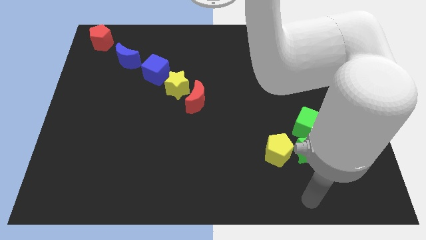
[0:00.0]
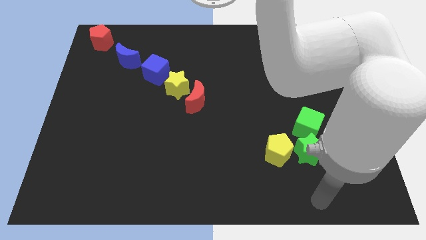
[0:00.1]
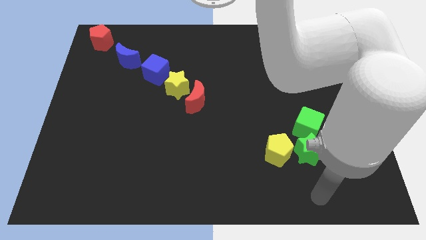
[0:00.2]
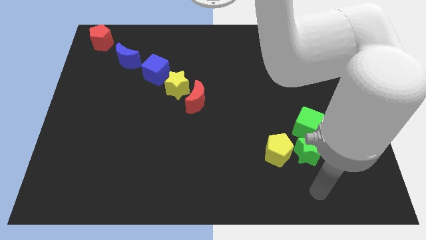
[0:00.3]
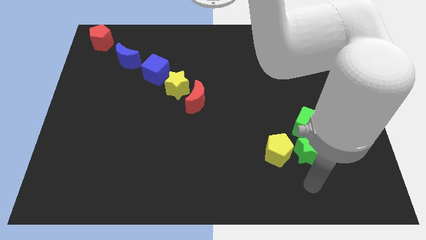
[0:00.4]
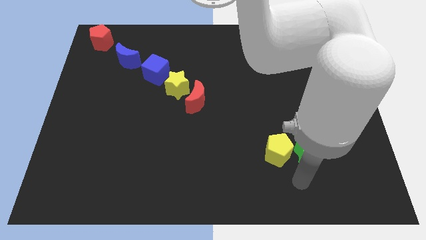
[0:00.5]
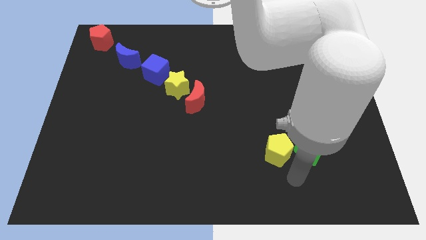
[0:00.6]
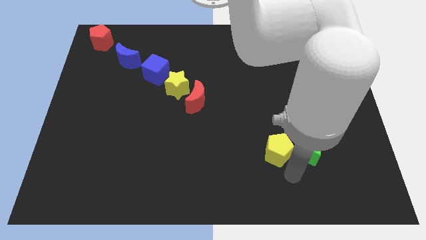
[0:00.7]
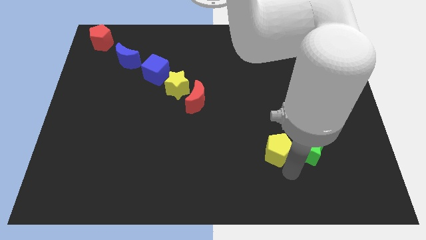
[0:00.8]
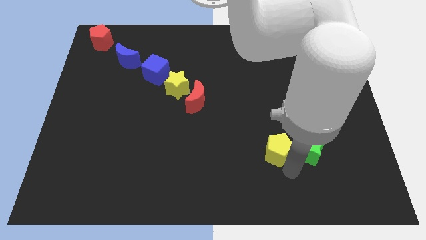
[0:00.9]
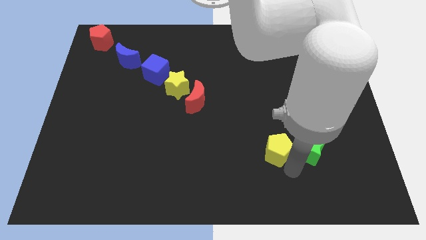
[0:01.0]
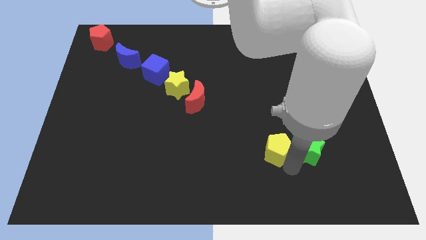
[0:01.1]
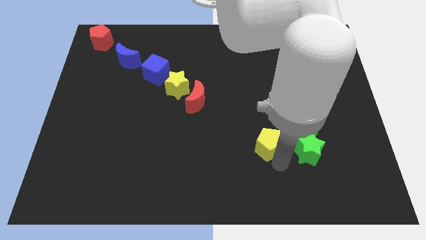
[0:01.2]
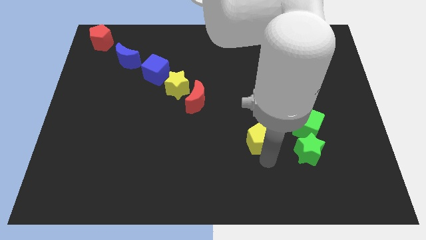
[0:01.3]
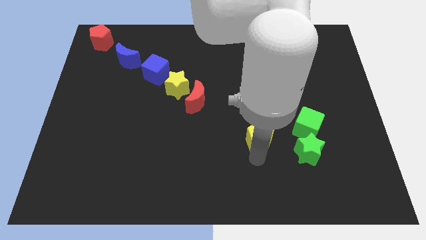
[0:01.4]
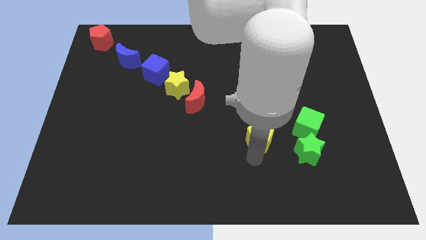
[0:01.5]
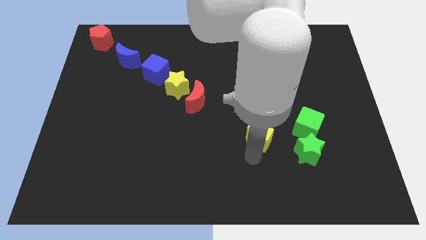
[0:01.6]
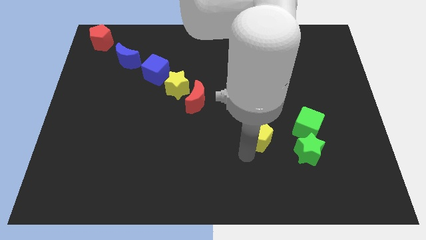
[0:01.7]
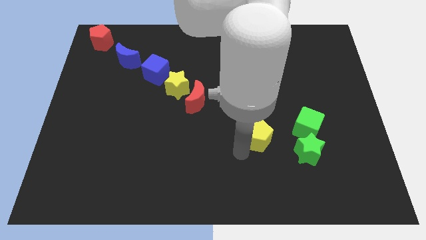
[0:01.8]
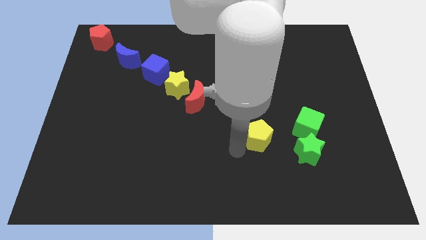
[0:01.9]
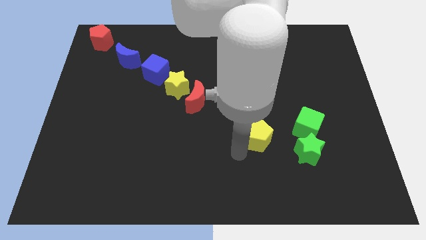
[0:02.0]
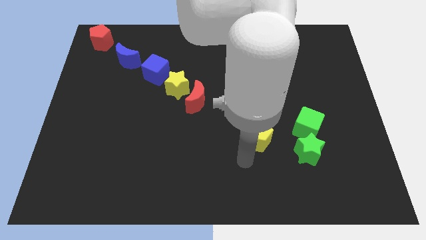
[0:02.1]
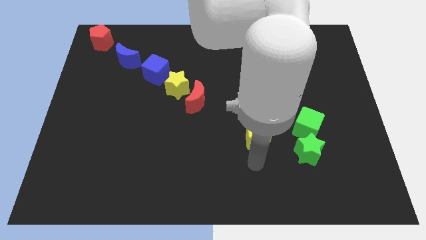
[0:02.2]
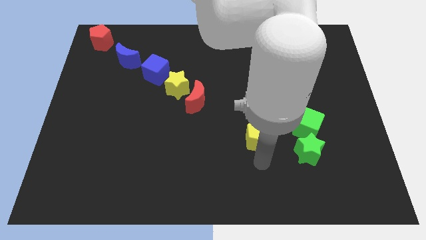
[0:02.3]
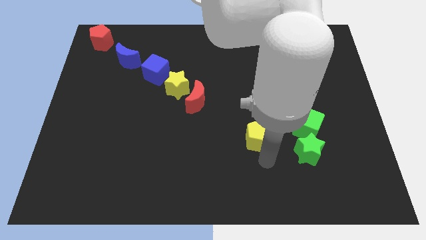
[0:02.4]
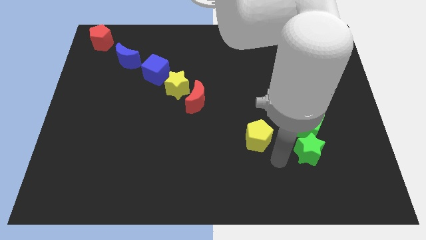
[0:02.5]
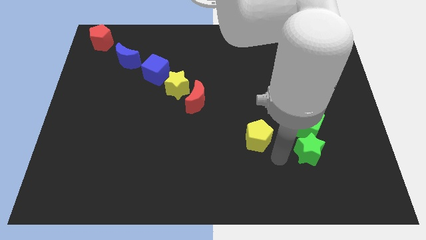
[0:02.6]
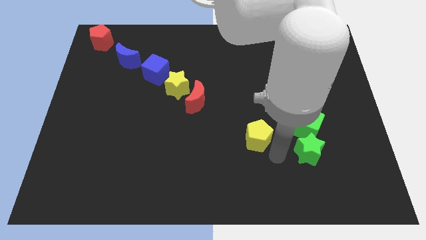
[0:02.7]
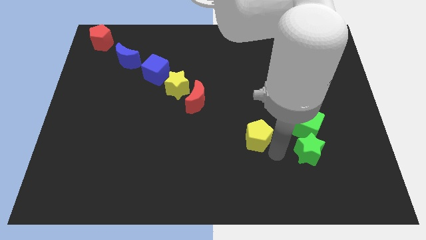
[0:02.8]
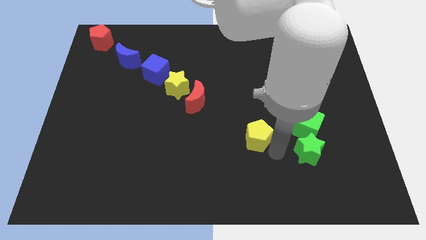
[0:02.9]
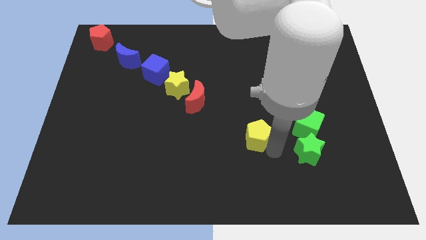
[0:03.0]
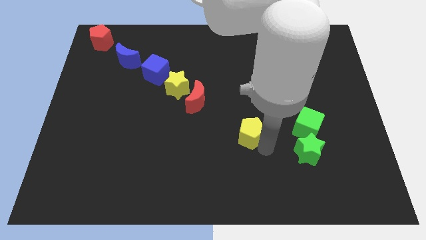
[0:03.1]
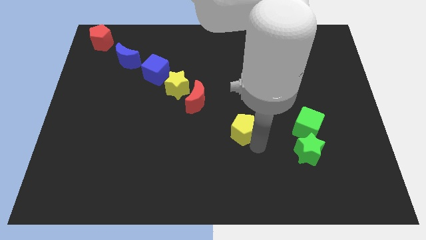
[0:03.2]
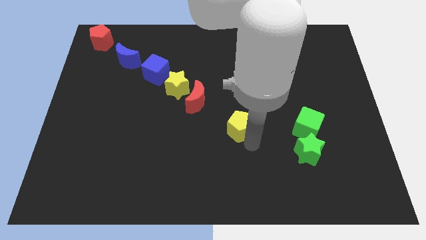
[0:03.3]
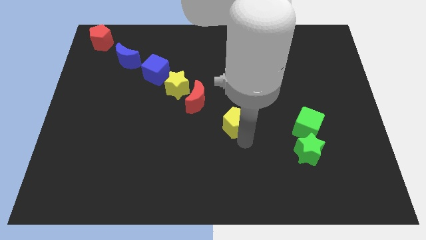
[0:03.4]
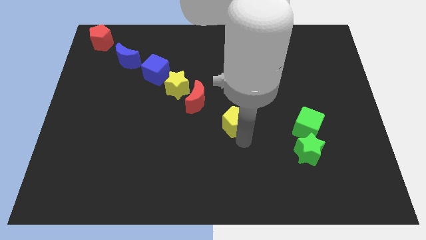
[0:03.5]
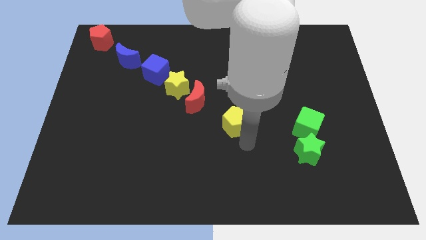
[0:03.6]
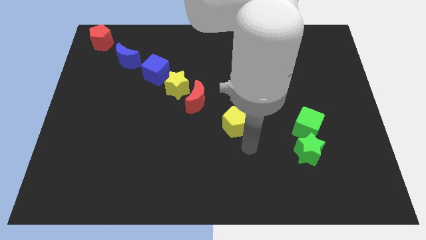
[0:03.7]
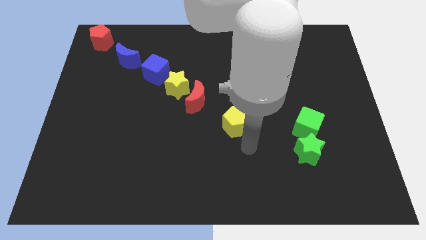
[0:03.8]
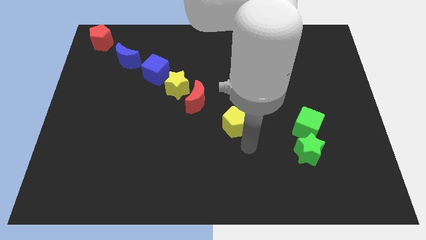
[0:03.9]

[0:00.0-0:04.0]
move the yellow pentagon to the top side

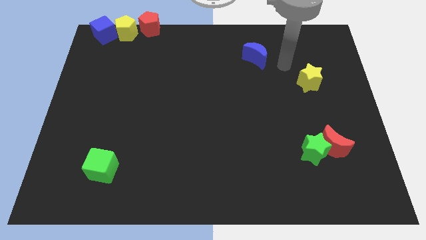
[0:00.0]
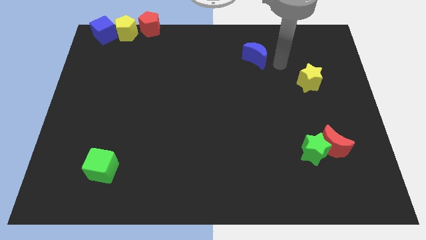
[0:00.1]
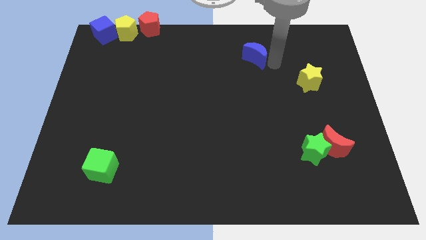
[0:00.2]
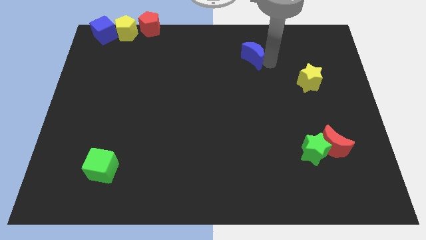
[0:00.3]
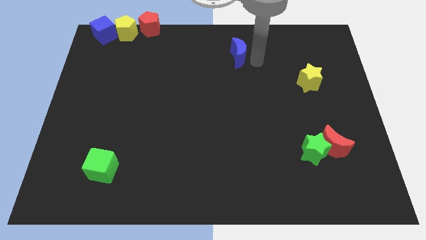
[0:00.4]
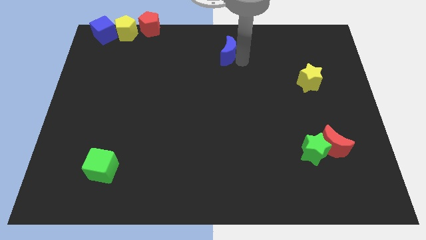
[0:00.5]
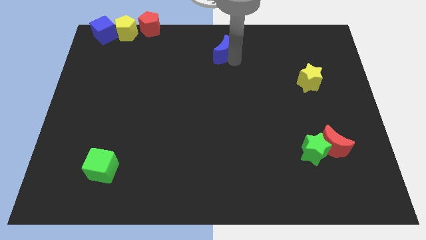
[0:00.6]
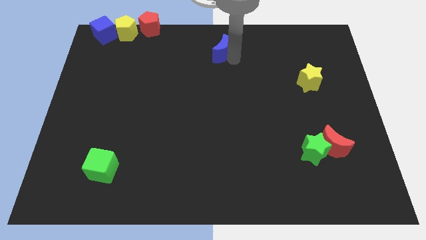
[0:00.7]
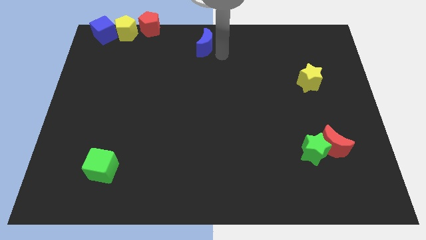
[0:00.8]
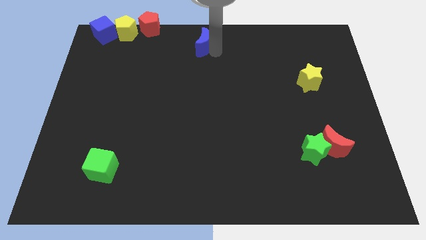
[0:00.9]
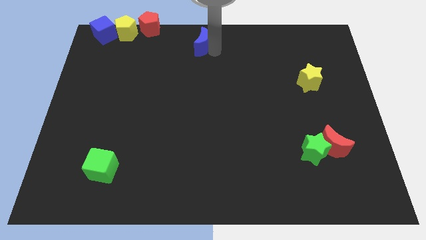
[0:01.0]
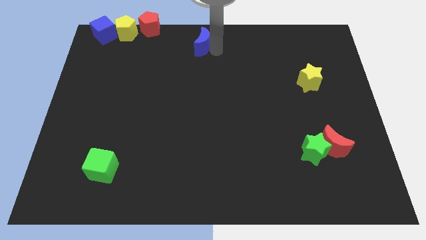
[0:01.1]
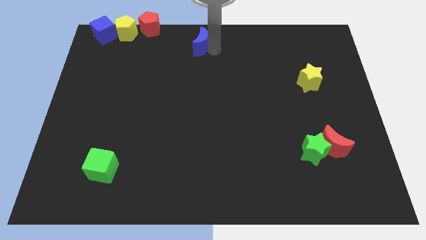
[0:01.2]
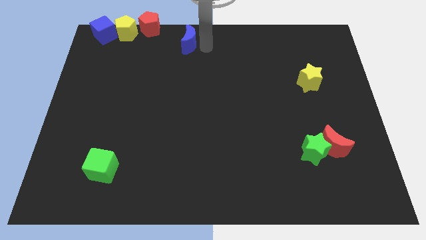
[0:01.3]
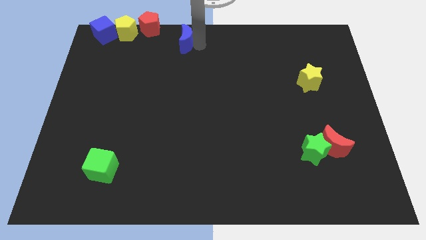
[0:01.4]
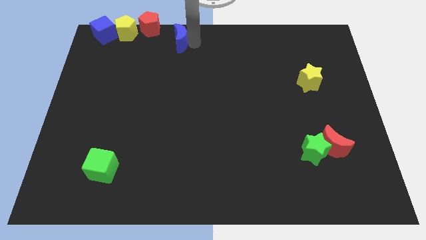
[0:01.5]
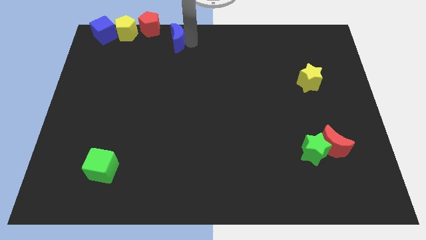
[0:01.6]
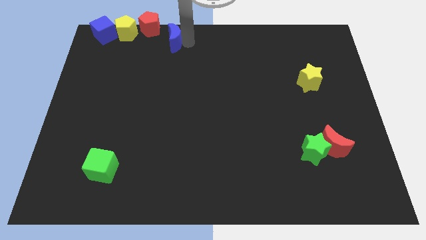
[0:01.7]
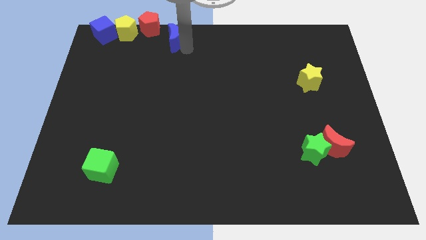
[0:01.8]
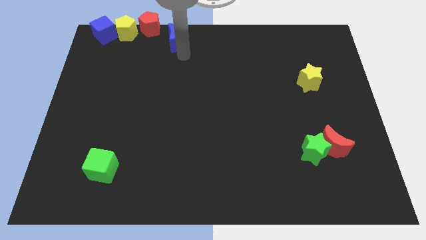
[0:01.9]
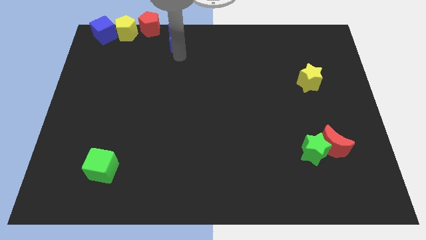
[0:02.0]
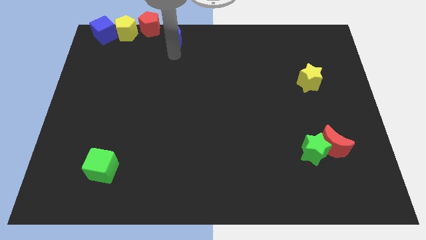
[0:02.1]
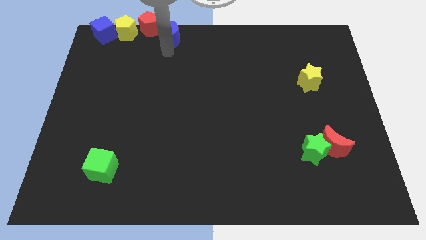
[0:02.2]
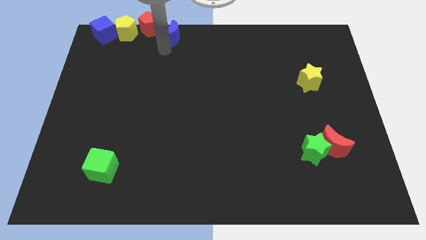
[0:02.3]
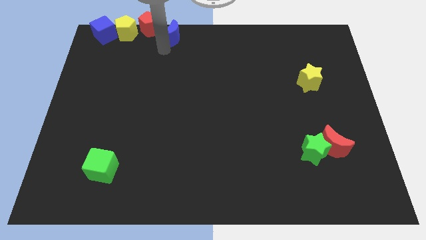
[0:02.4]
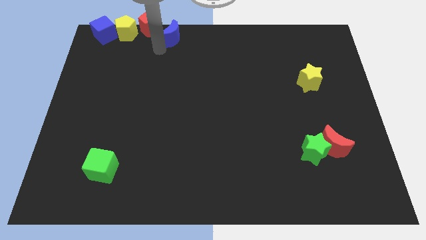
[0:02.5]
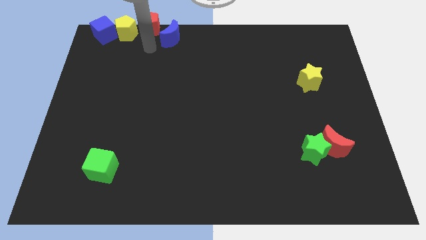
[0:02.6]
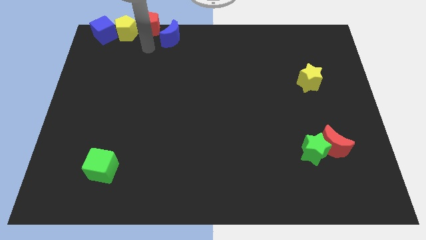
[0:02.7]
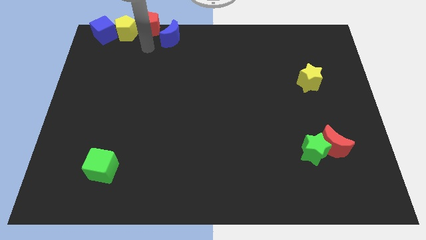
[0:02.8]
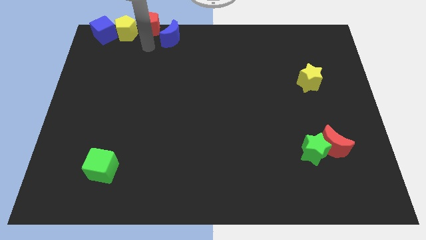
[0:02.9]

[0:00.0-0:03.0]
move the blue crescent to the right of the red pentagon

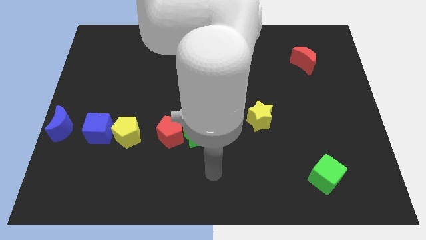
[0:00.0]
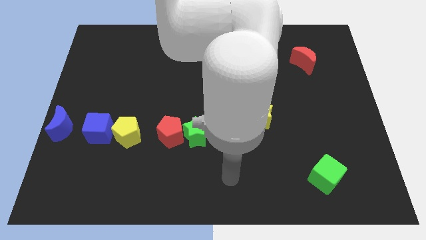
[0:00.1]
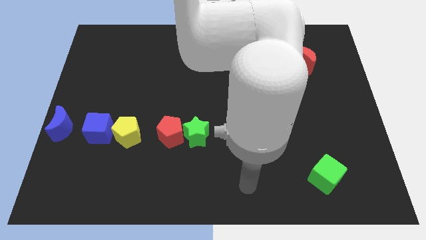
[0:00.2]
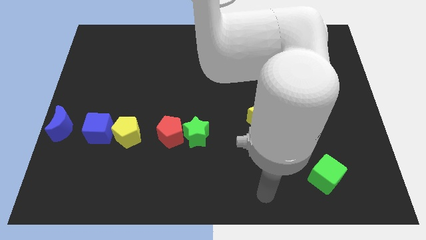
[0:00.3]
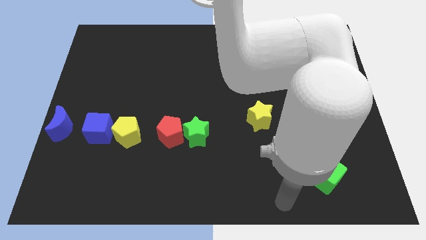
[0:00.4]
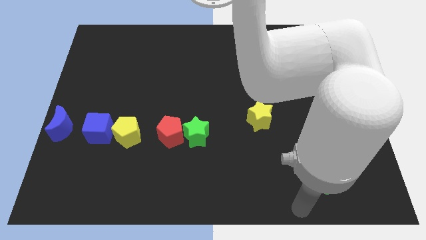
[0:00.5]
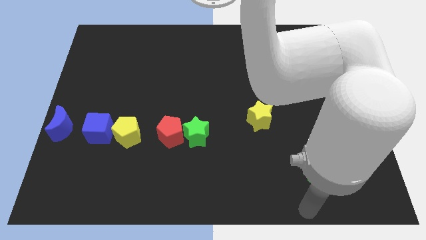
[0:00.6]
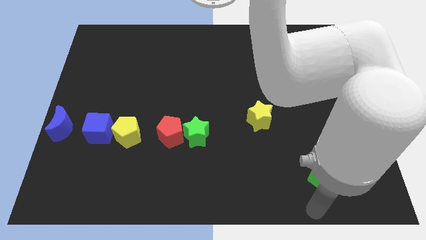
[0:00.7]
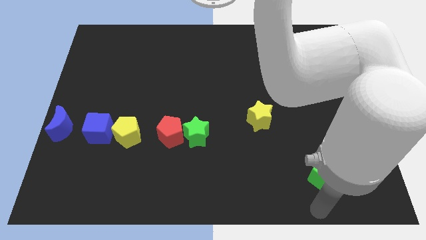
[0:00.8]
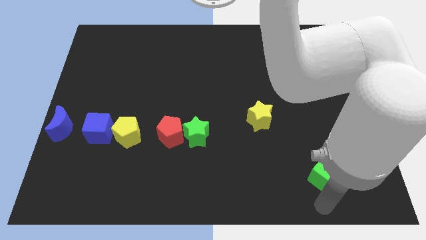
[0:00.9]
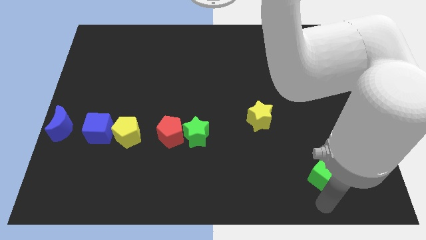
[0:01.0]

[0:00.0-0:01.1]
place your arm to the bottom side of the green cube

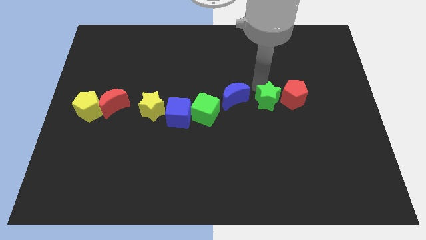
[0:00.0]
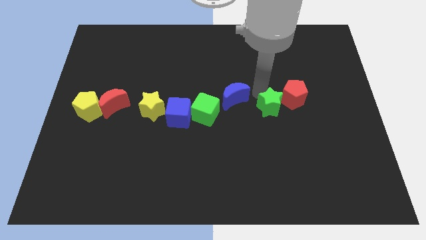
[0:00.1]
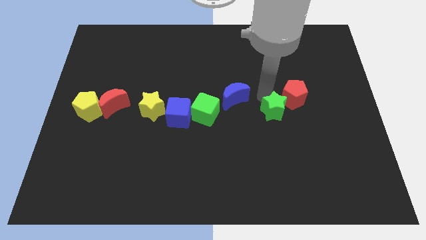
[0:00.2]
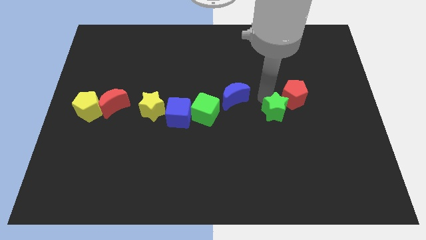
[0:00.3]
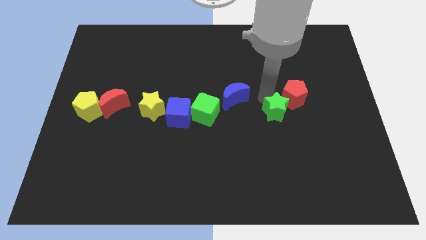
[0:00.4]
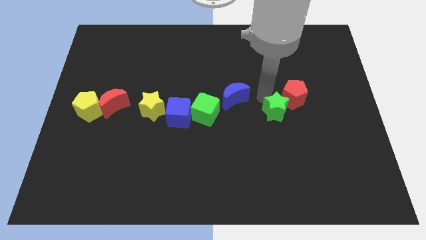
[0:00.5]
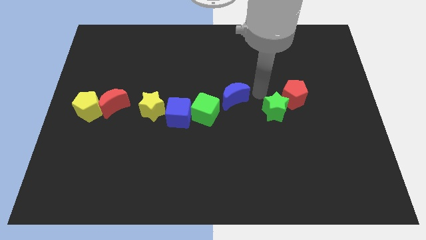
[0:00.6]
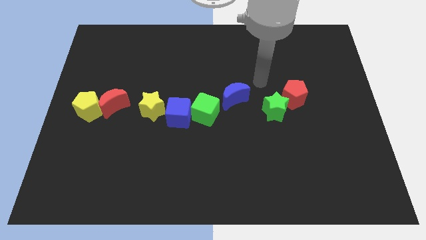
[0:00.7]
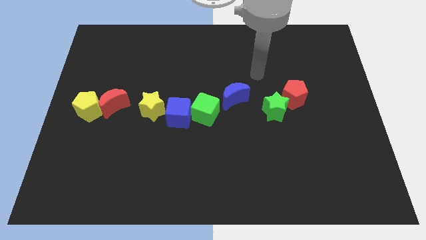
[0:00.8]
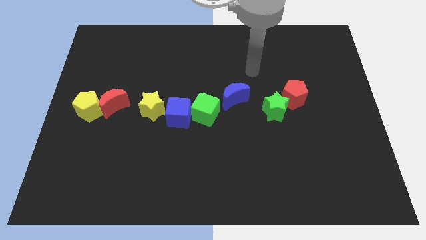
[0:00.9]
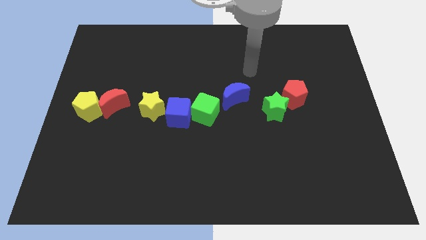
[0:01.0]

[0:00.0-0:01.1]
push the green star slightly down
